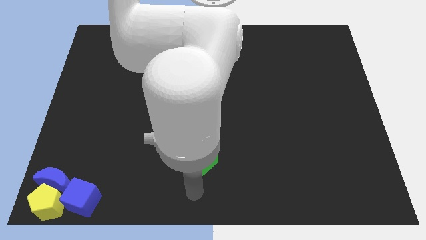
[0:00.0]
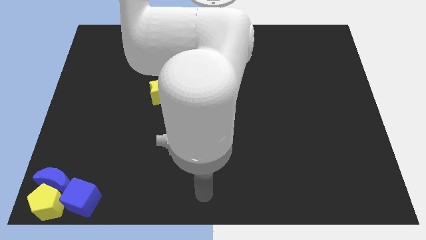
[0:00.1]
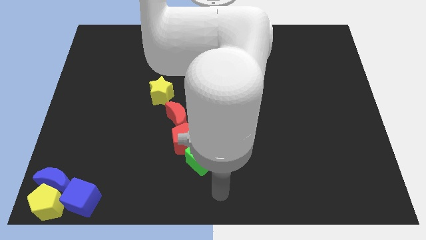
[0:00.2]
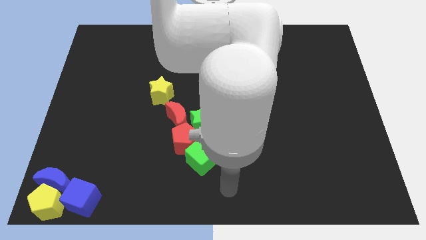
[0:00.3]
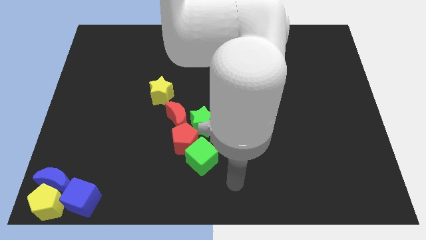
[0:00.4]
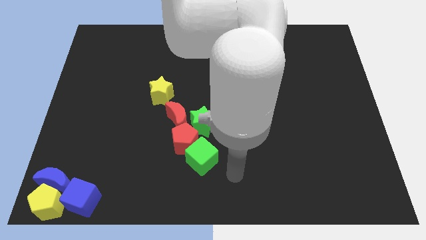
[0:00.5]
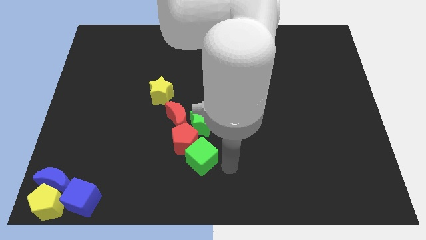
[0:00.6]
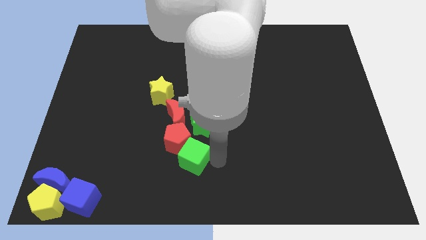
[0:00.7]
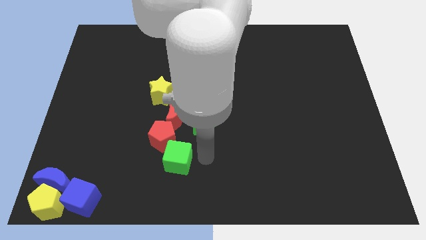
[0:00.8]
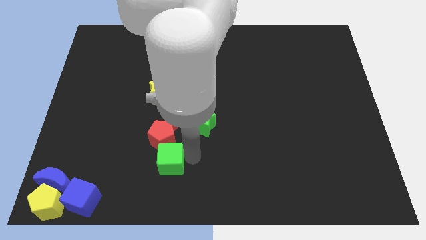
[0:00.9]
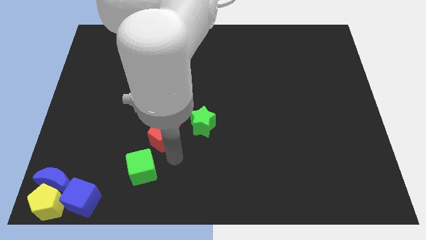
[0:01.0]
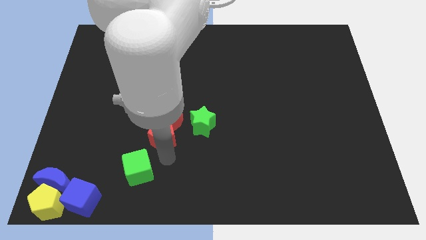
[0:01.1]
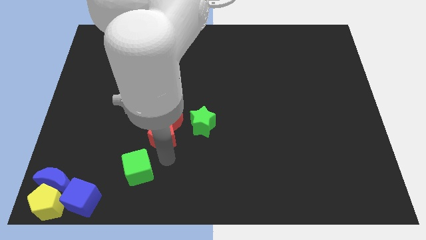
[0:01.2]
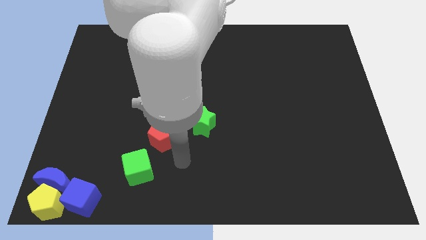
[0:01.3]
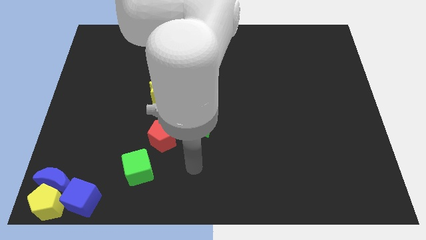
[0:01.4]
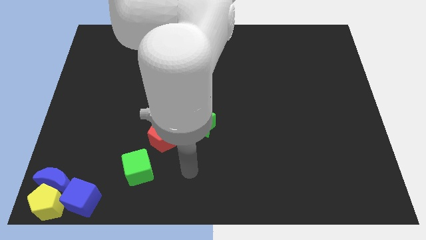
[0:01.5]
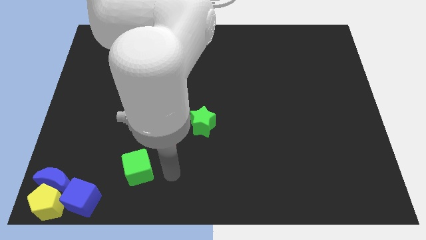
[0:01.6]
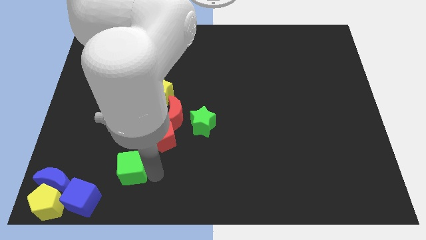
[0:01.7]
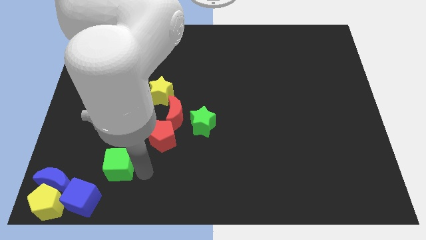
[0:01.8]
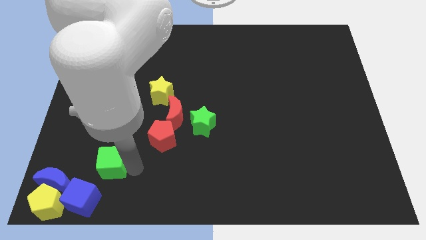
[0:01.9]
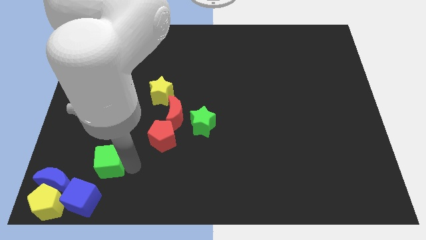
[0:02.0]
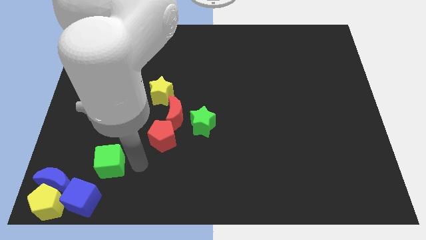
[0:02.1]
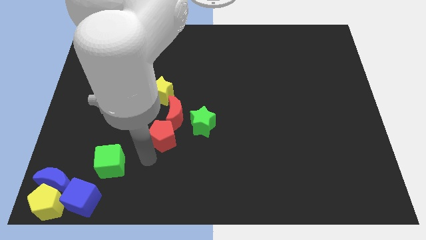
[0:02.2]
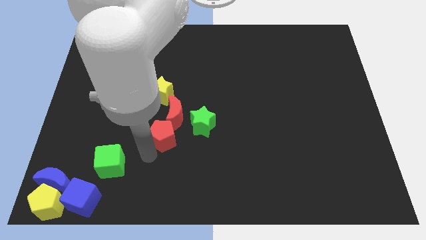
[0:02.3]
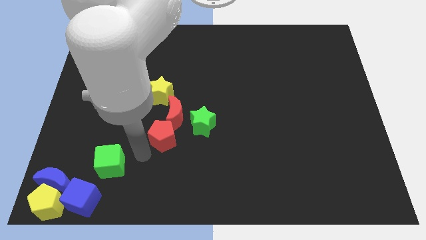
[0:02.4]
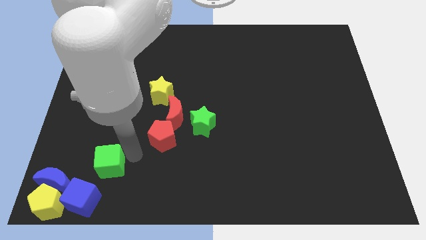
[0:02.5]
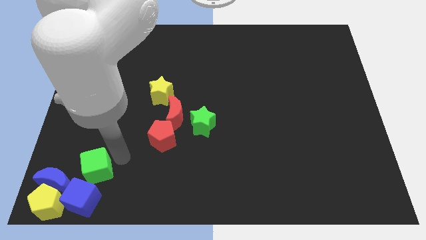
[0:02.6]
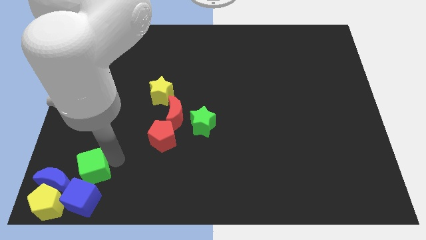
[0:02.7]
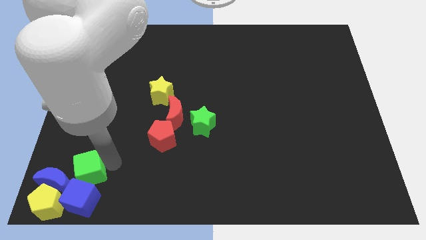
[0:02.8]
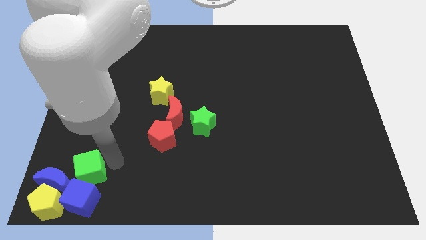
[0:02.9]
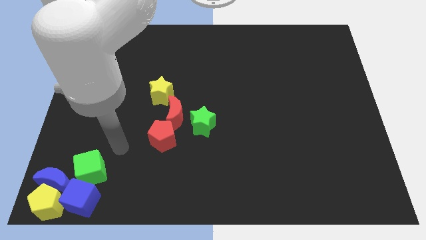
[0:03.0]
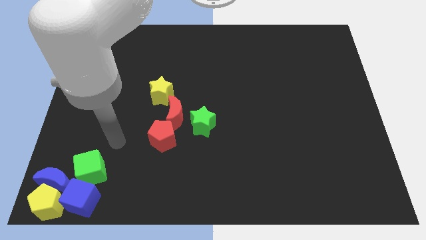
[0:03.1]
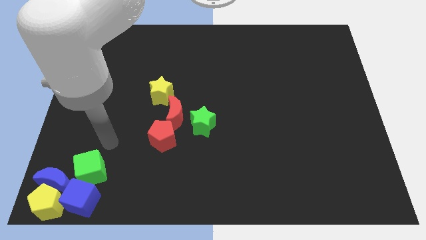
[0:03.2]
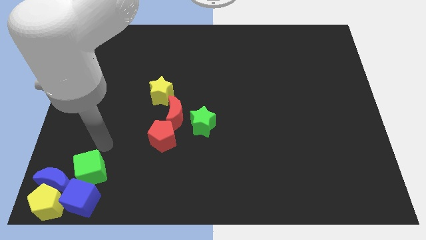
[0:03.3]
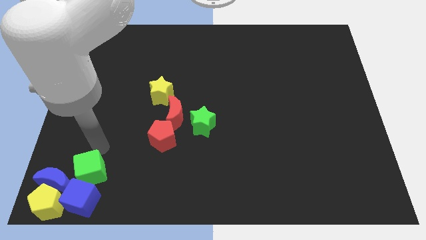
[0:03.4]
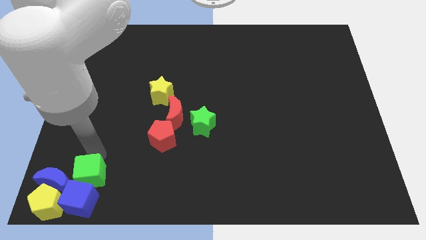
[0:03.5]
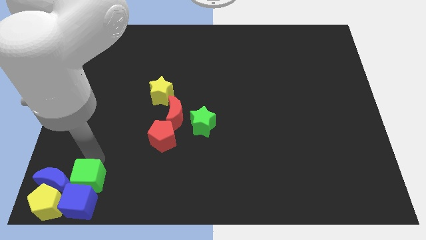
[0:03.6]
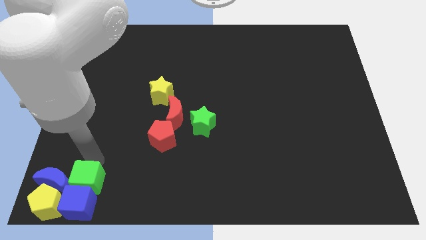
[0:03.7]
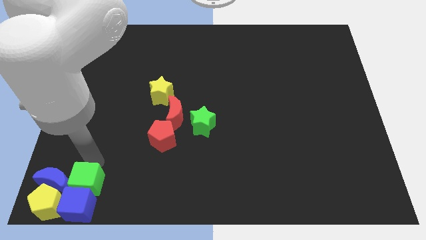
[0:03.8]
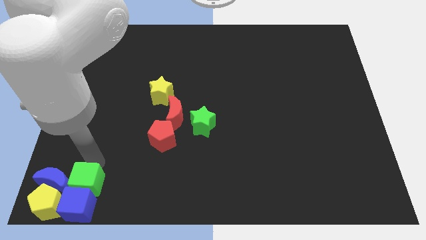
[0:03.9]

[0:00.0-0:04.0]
move green cube above the blue cube

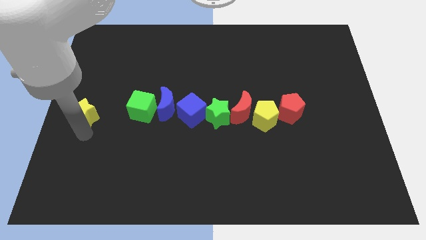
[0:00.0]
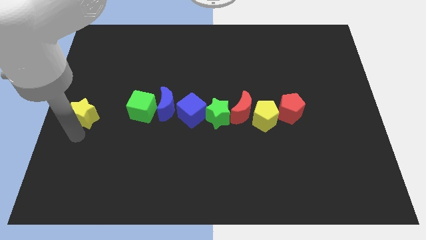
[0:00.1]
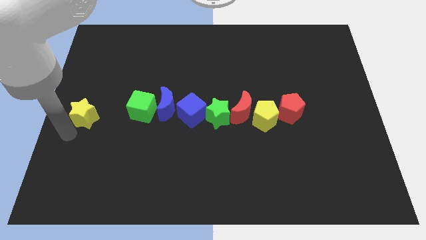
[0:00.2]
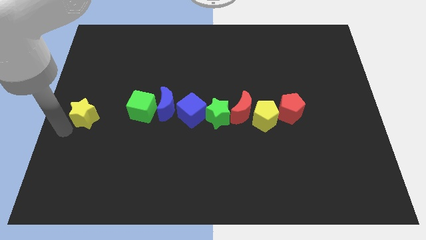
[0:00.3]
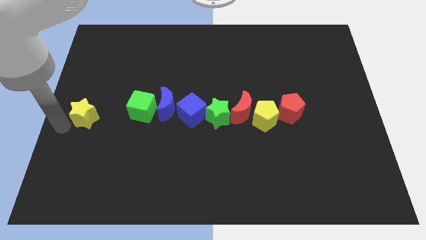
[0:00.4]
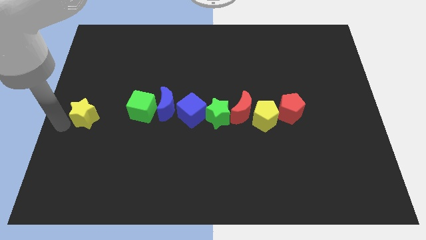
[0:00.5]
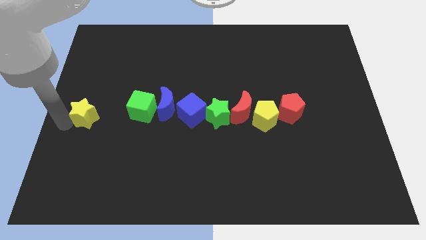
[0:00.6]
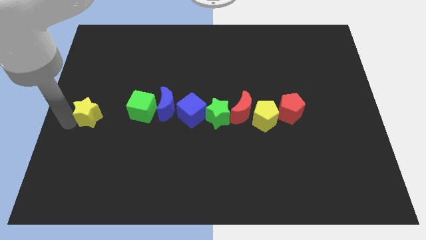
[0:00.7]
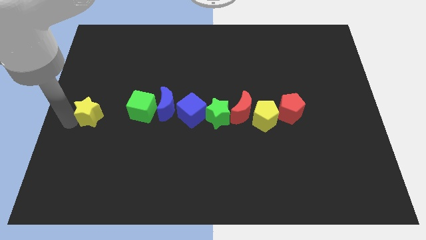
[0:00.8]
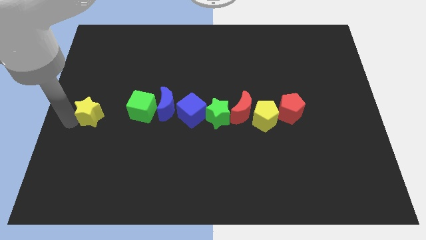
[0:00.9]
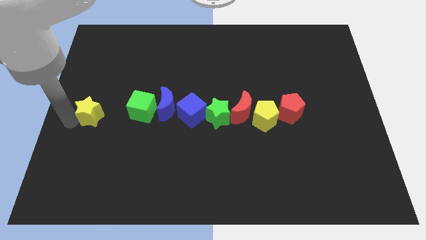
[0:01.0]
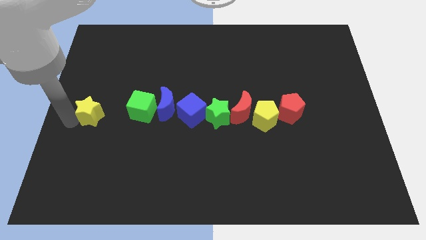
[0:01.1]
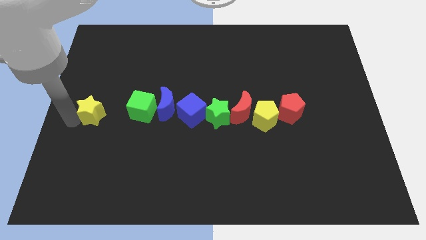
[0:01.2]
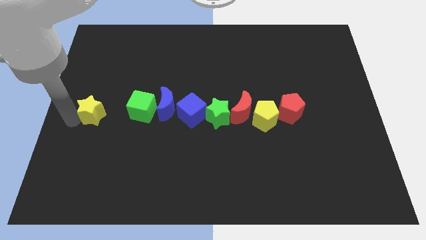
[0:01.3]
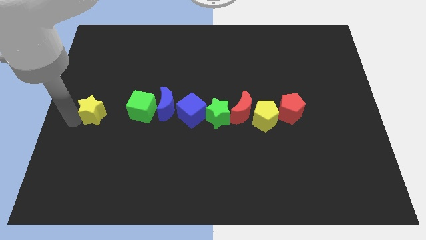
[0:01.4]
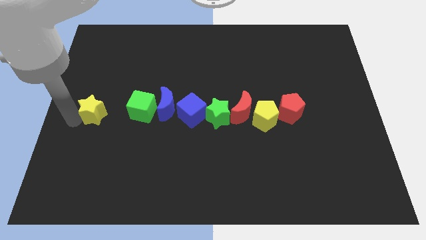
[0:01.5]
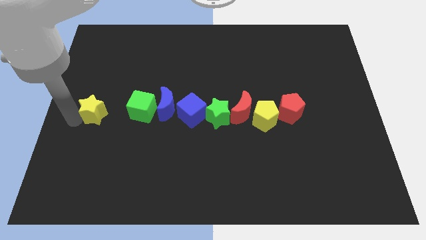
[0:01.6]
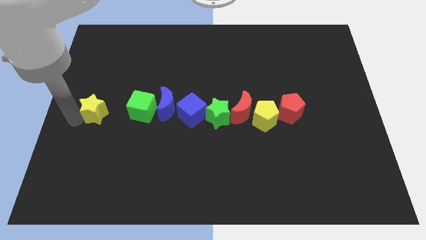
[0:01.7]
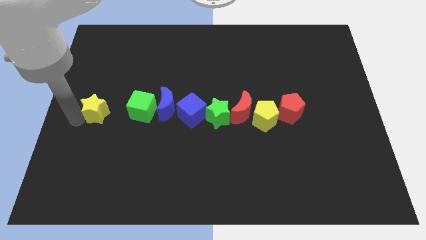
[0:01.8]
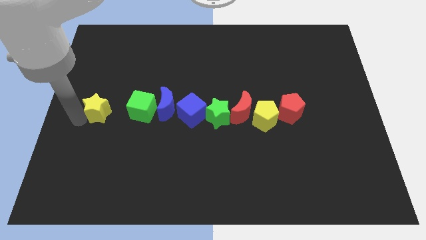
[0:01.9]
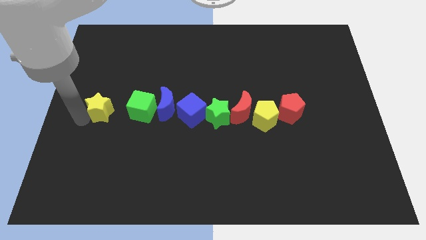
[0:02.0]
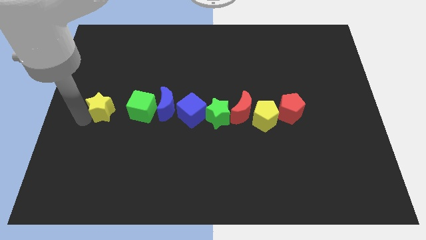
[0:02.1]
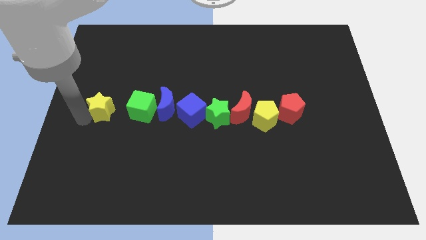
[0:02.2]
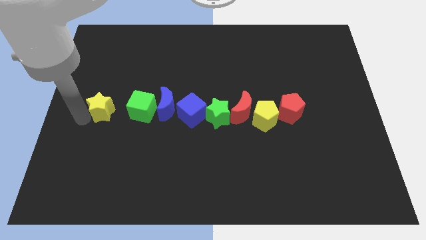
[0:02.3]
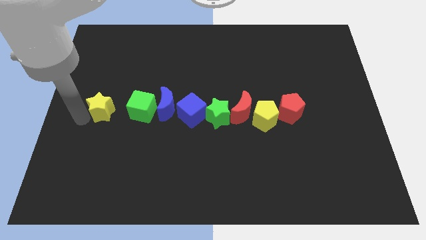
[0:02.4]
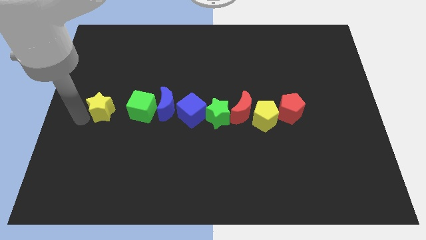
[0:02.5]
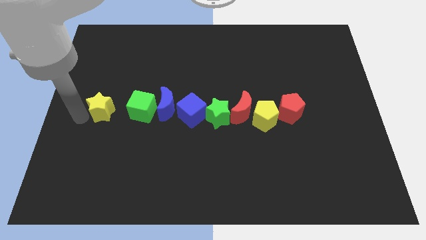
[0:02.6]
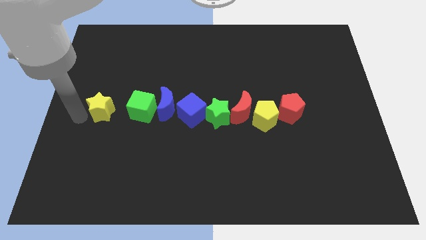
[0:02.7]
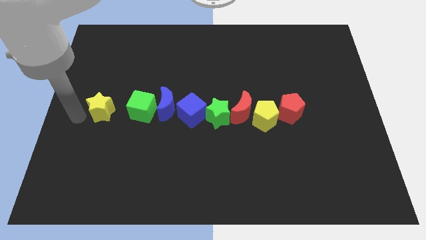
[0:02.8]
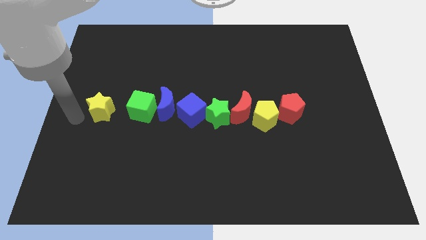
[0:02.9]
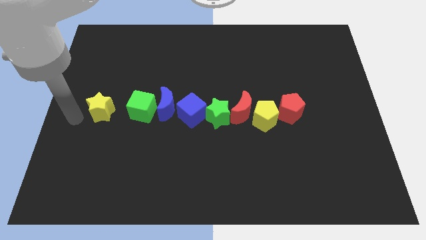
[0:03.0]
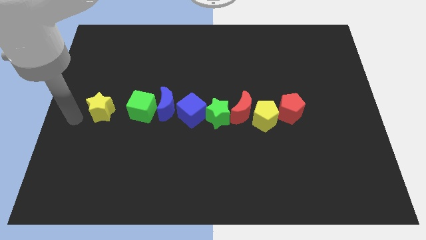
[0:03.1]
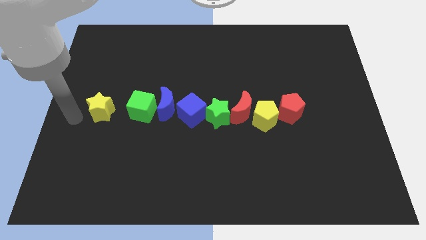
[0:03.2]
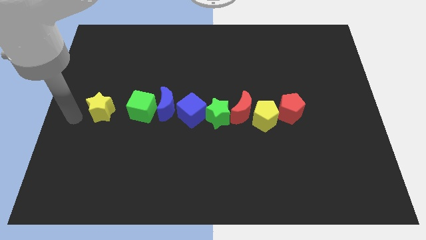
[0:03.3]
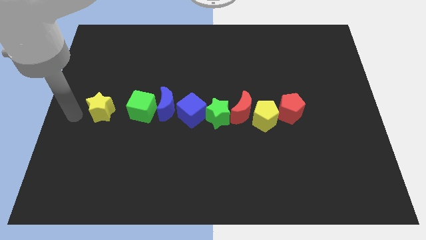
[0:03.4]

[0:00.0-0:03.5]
place the yellow star to the left of the green cube

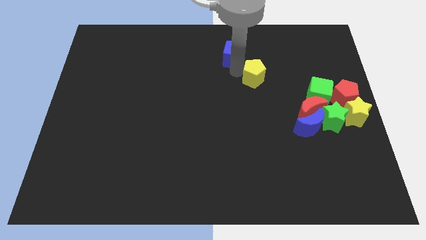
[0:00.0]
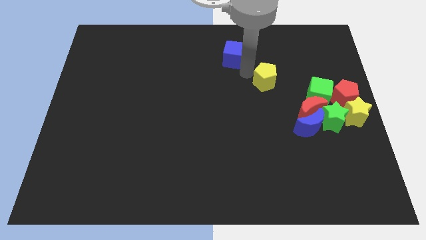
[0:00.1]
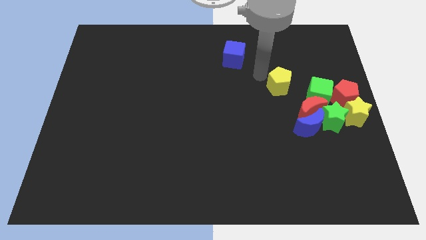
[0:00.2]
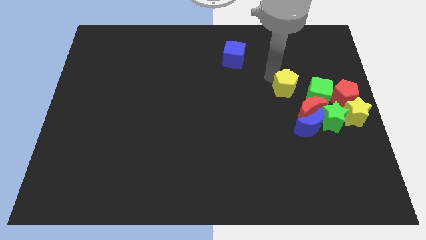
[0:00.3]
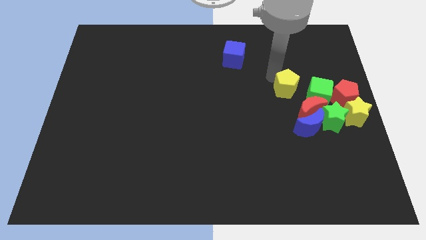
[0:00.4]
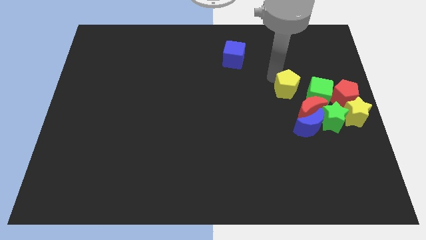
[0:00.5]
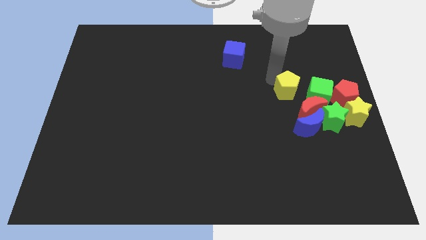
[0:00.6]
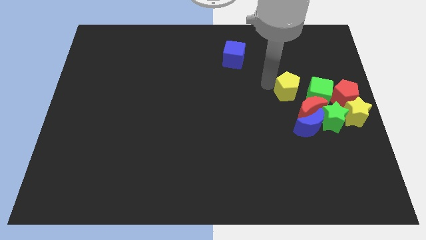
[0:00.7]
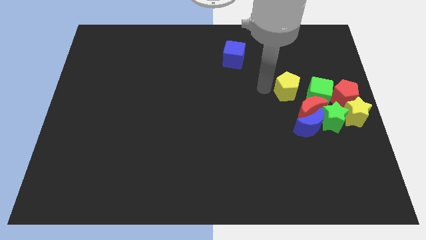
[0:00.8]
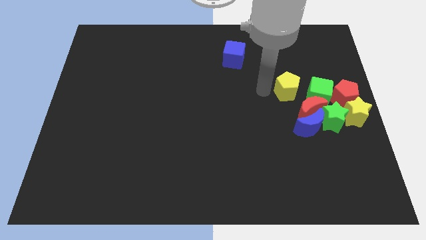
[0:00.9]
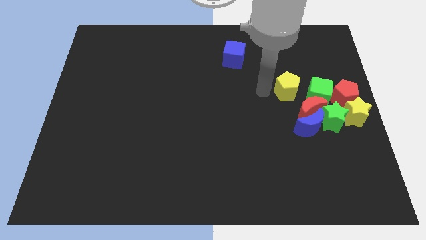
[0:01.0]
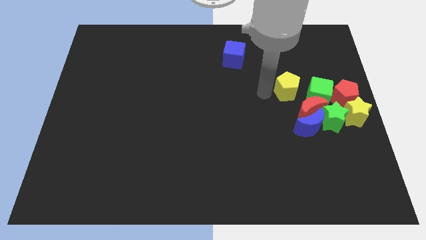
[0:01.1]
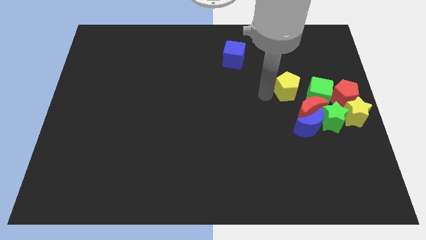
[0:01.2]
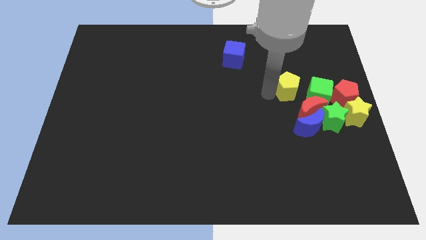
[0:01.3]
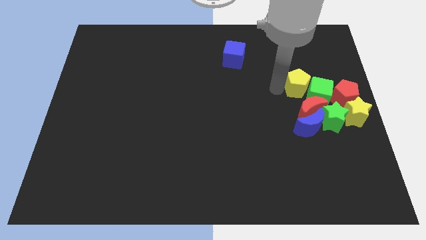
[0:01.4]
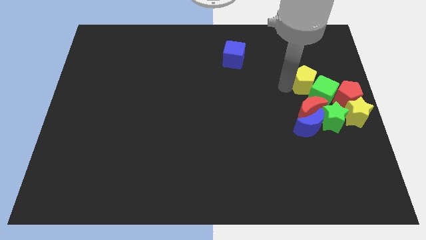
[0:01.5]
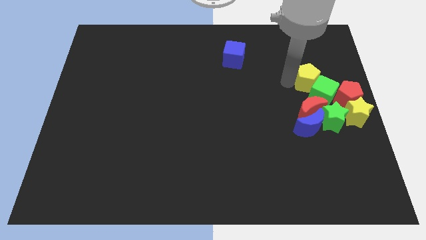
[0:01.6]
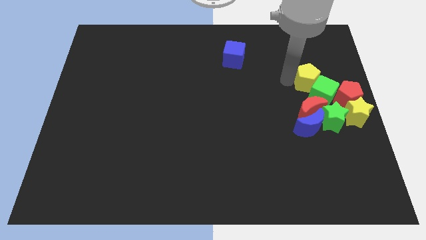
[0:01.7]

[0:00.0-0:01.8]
slide the yellow pentagon into the green cube
